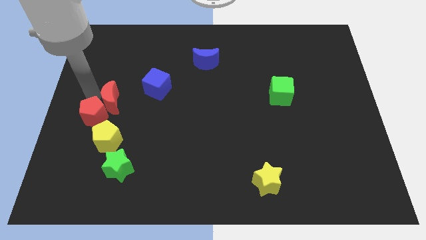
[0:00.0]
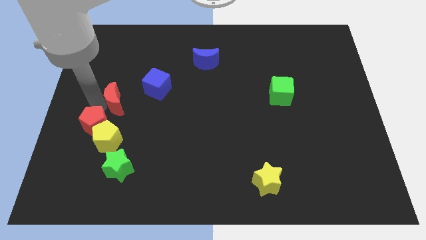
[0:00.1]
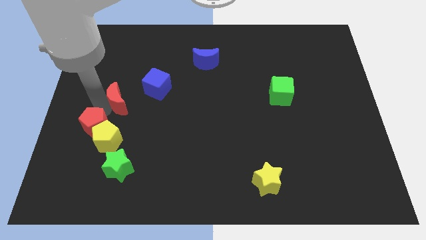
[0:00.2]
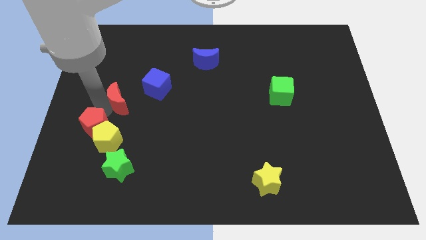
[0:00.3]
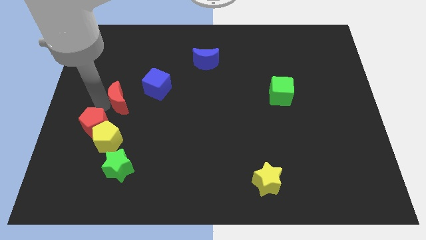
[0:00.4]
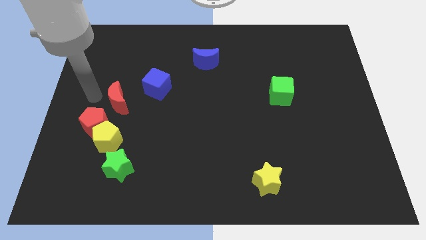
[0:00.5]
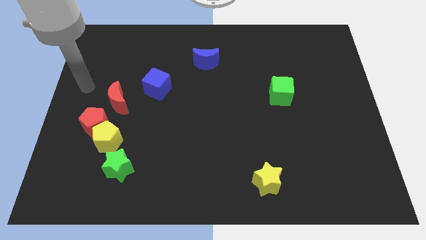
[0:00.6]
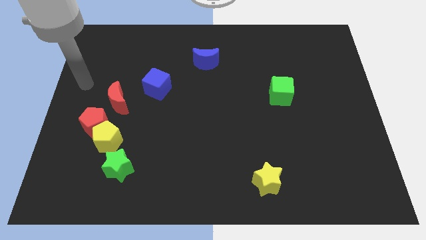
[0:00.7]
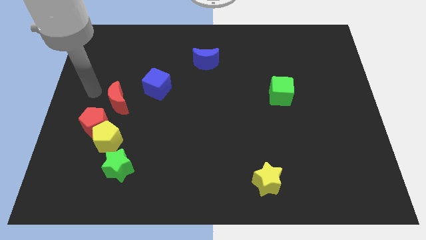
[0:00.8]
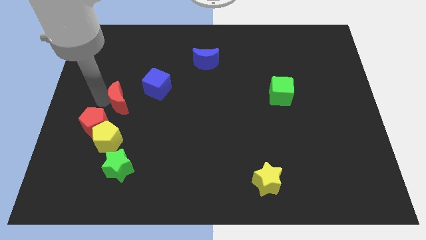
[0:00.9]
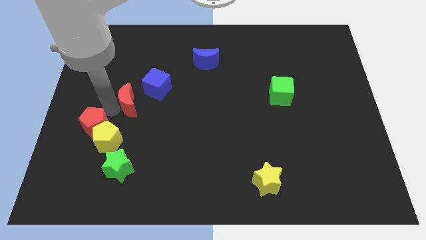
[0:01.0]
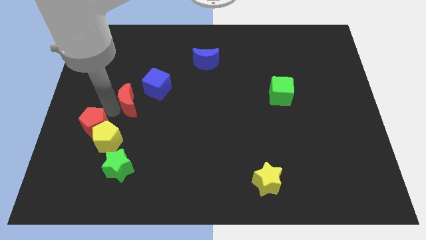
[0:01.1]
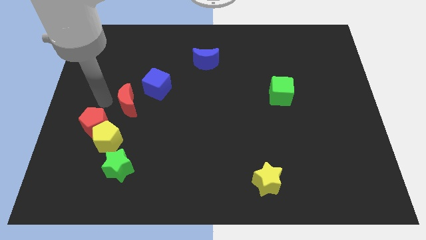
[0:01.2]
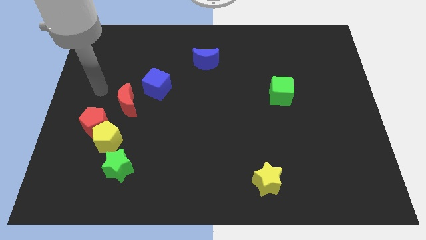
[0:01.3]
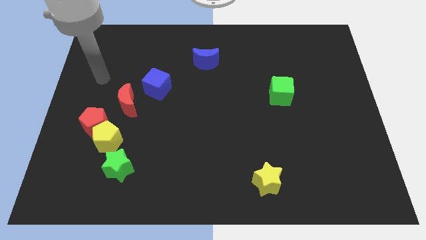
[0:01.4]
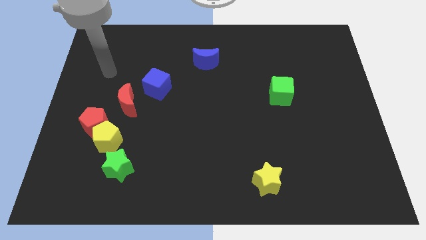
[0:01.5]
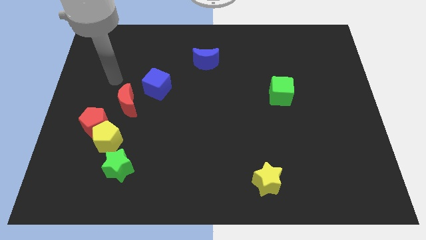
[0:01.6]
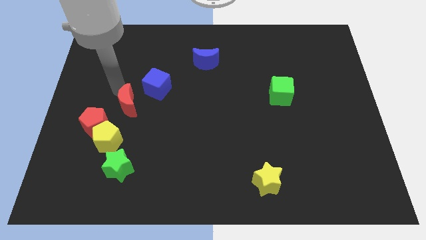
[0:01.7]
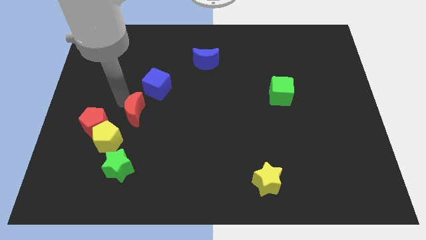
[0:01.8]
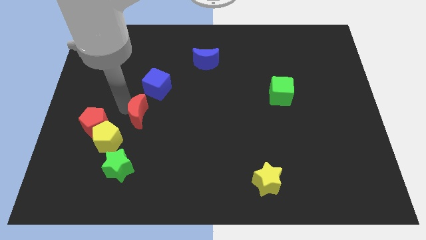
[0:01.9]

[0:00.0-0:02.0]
move the red crescent left below the blue cube

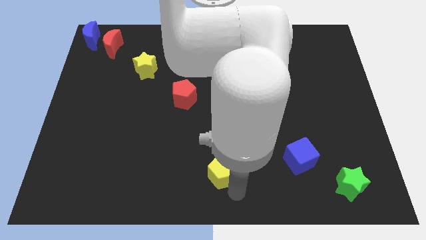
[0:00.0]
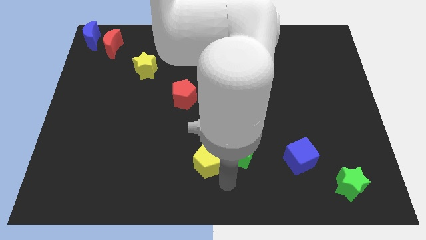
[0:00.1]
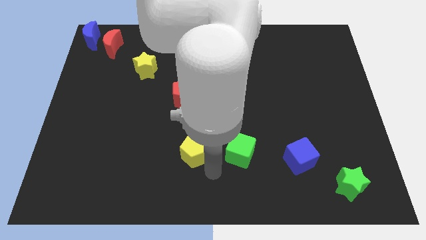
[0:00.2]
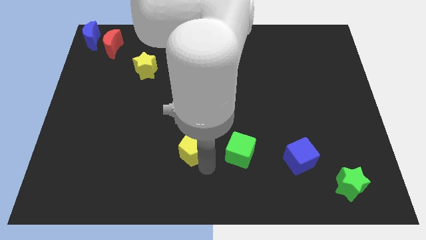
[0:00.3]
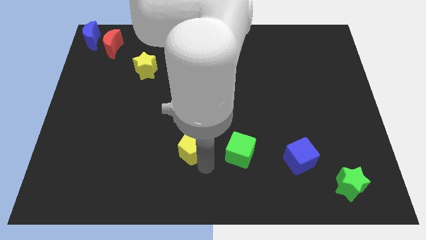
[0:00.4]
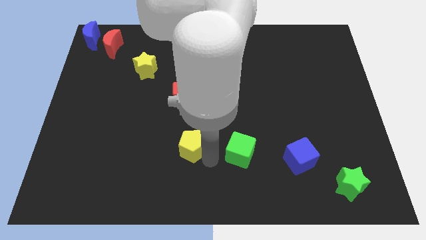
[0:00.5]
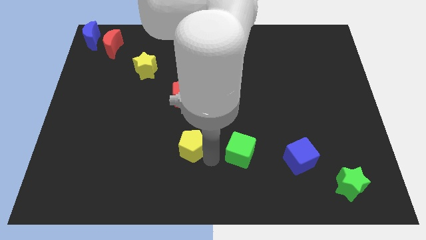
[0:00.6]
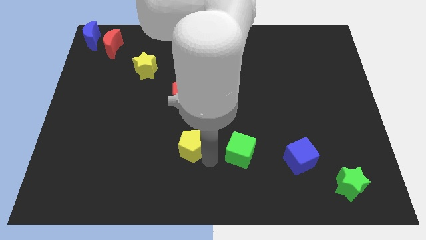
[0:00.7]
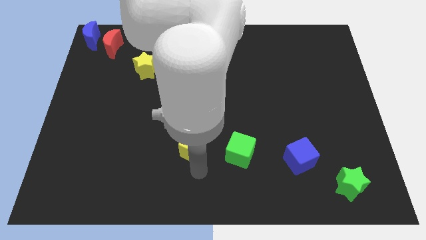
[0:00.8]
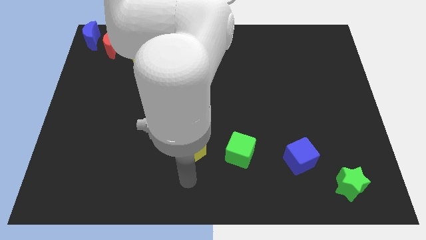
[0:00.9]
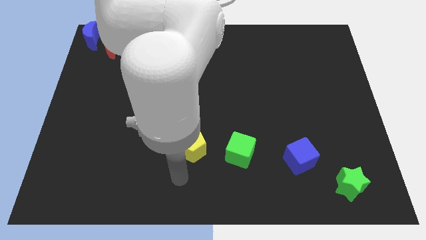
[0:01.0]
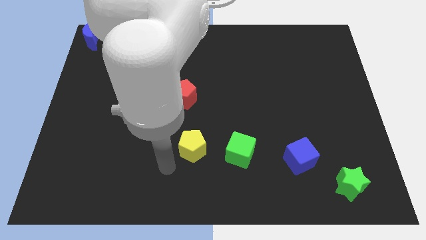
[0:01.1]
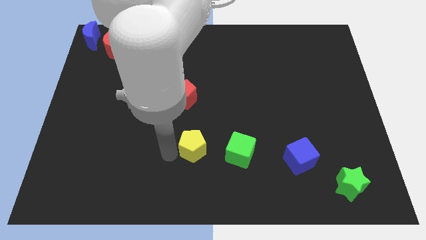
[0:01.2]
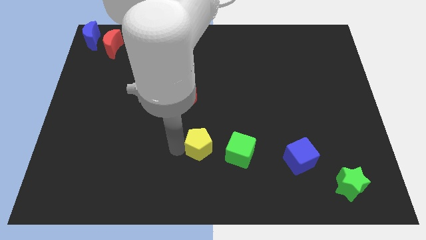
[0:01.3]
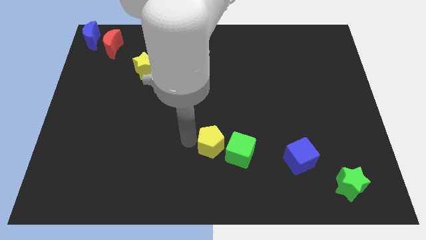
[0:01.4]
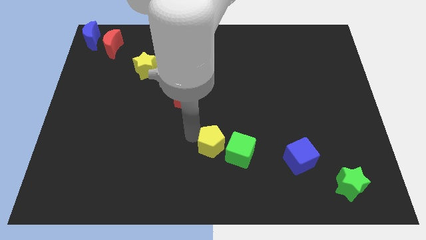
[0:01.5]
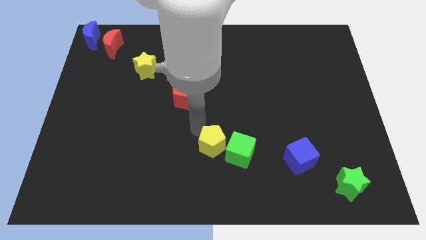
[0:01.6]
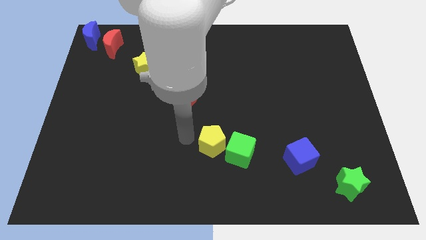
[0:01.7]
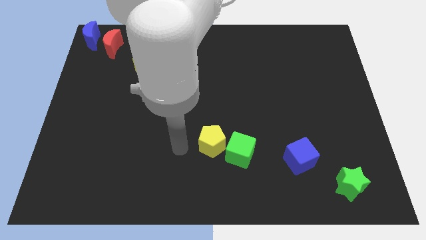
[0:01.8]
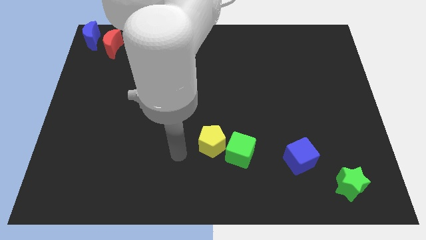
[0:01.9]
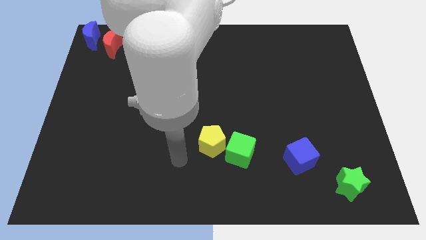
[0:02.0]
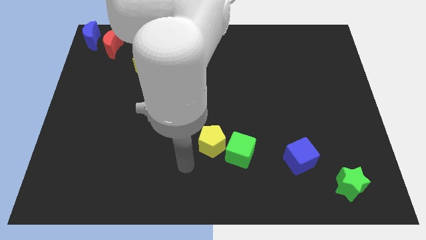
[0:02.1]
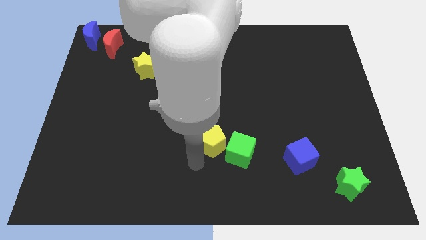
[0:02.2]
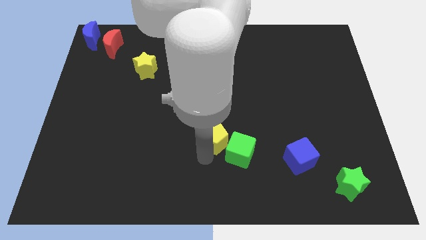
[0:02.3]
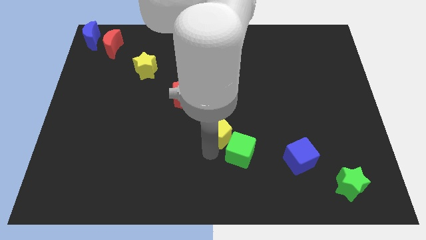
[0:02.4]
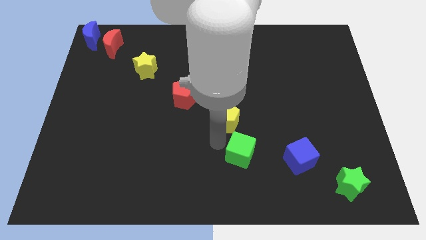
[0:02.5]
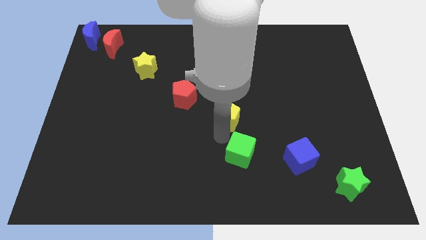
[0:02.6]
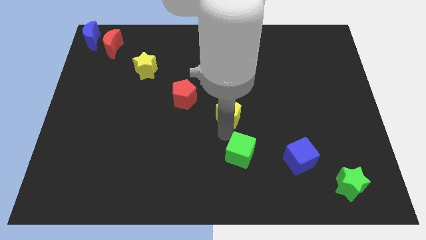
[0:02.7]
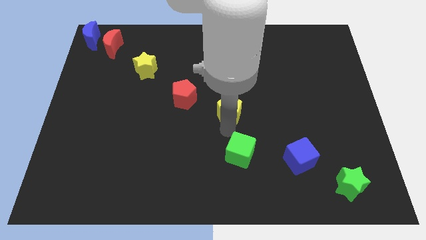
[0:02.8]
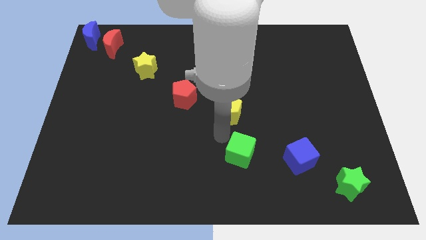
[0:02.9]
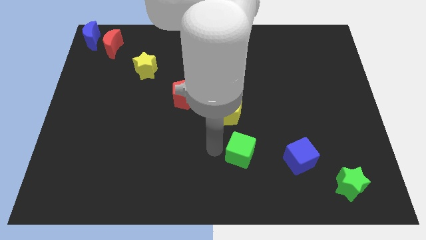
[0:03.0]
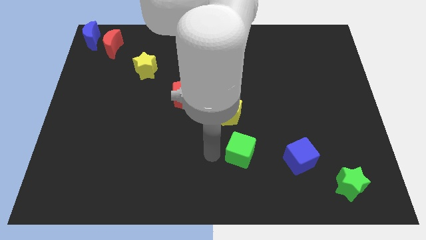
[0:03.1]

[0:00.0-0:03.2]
separate yellow block from green cube

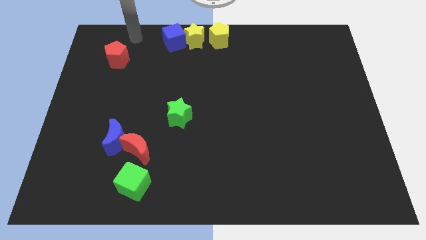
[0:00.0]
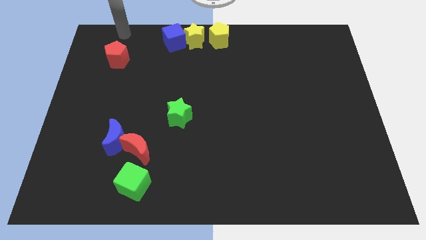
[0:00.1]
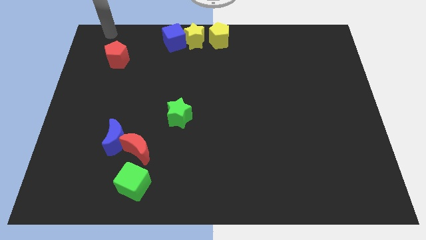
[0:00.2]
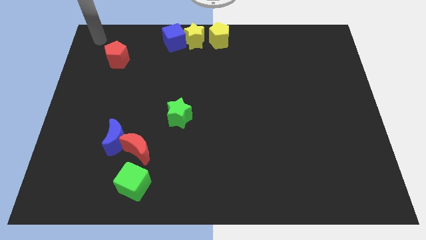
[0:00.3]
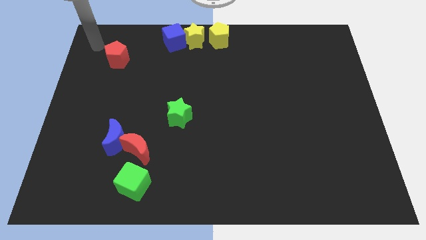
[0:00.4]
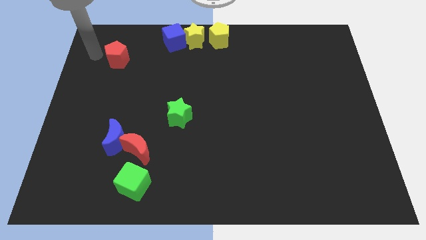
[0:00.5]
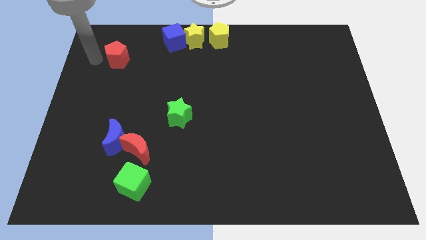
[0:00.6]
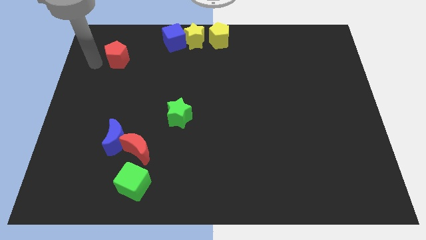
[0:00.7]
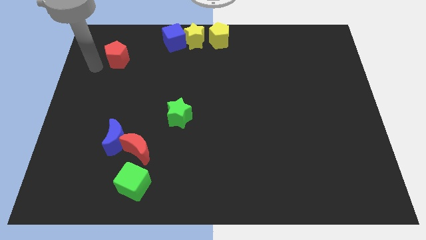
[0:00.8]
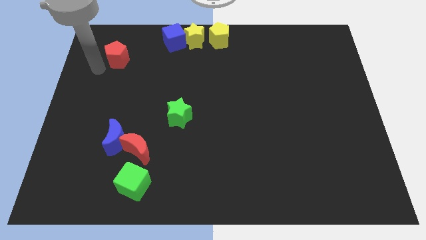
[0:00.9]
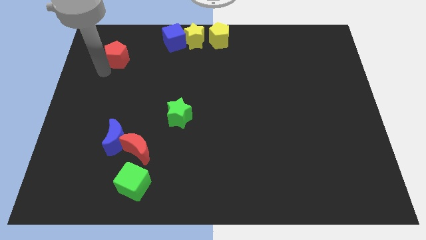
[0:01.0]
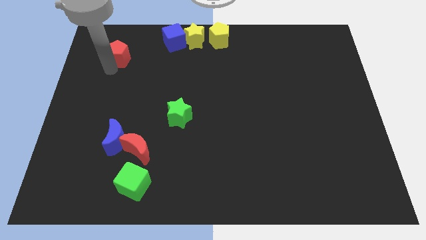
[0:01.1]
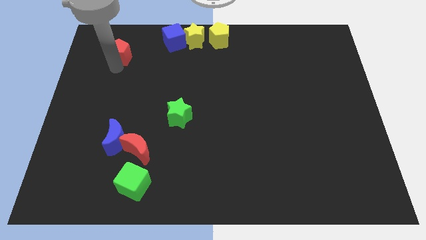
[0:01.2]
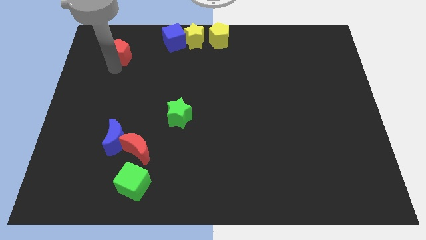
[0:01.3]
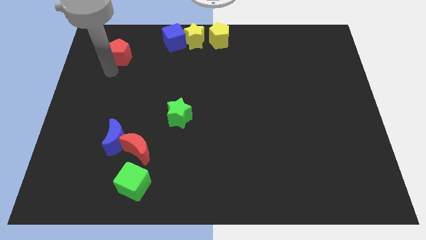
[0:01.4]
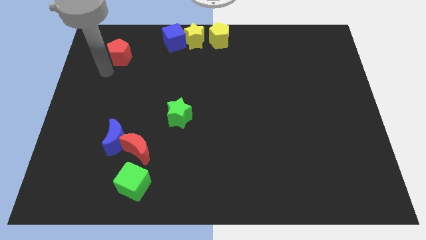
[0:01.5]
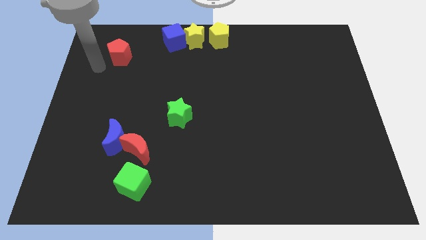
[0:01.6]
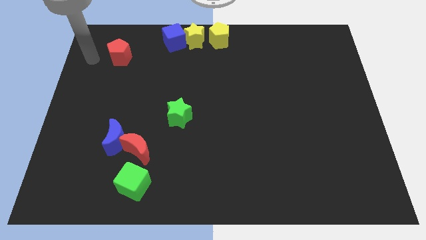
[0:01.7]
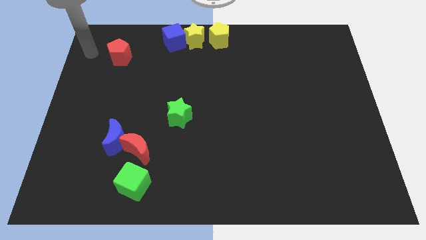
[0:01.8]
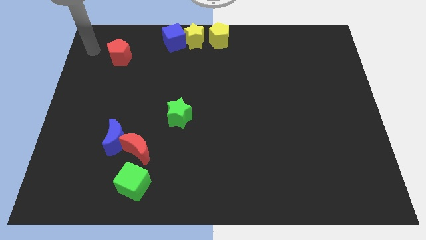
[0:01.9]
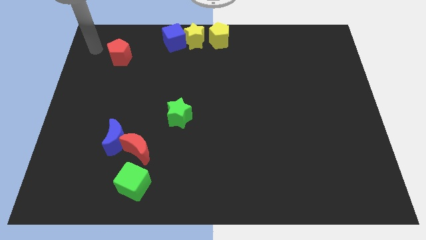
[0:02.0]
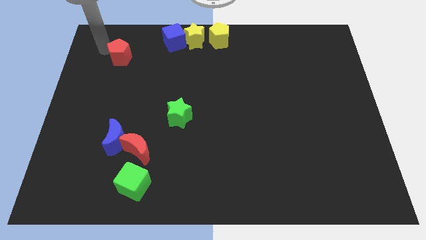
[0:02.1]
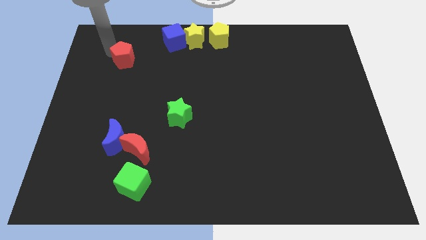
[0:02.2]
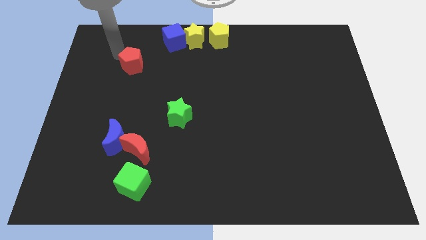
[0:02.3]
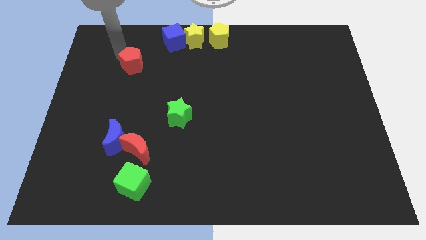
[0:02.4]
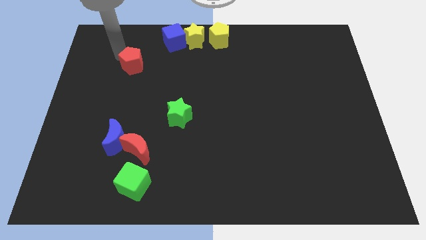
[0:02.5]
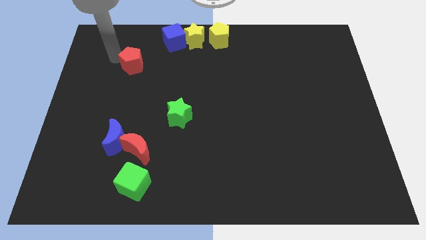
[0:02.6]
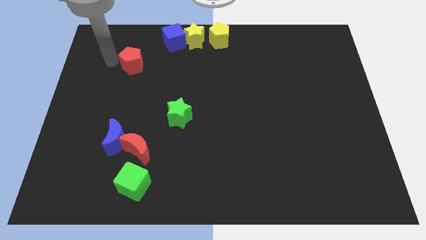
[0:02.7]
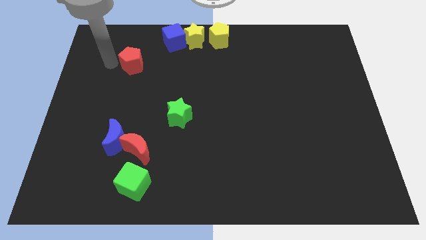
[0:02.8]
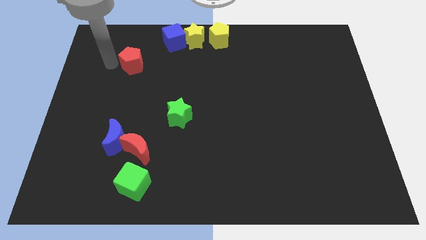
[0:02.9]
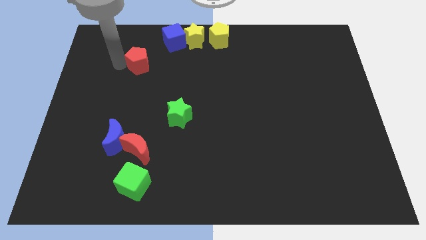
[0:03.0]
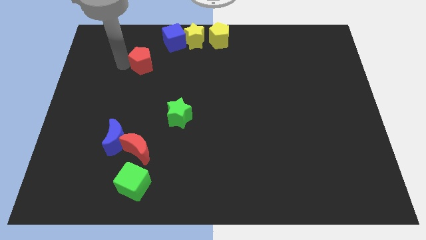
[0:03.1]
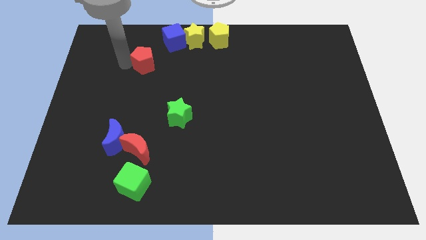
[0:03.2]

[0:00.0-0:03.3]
place the red pentagon diagonally bottom left to the blue cube

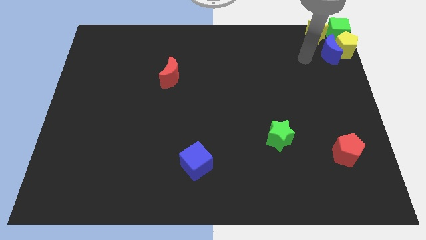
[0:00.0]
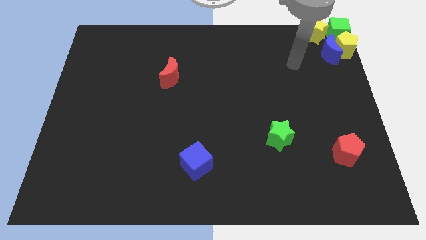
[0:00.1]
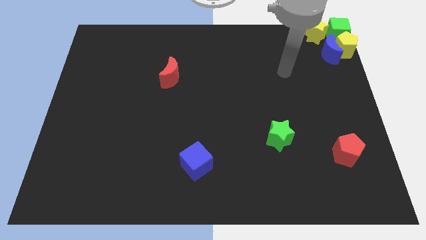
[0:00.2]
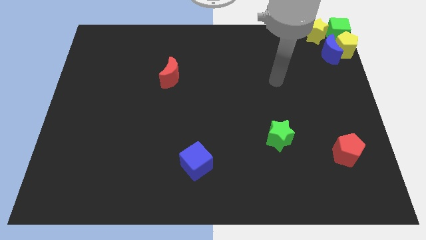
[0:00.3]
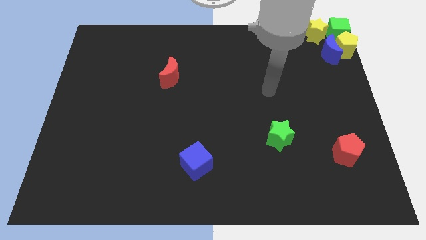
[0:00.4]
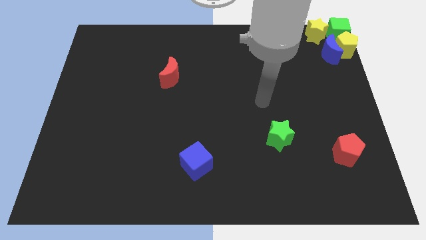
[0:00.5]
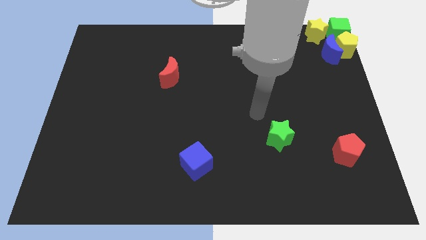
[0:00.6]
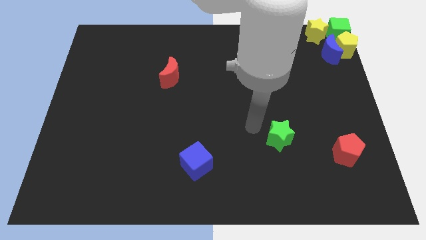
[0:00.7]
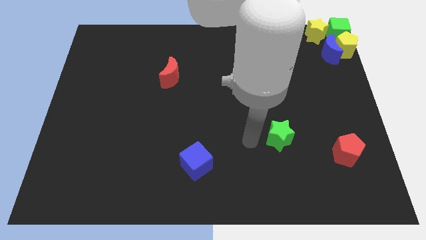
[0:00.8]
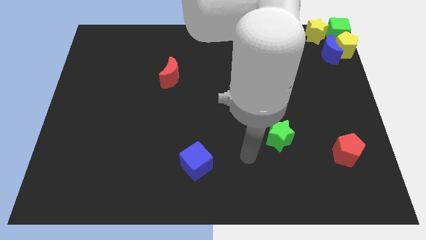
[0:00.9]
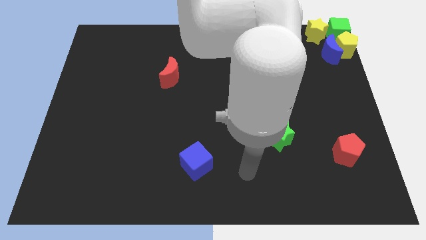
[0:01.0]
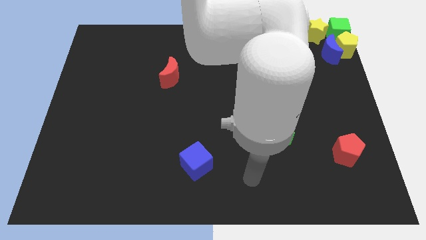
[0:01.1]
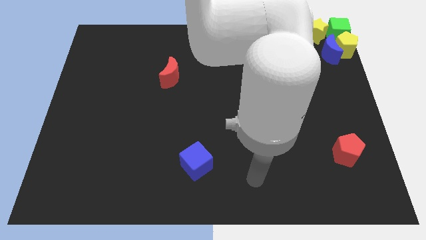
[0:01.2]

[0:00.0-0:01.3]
move your arm away from the blue moon
